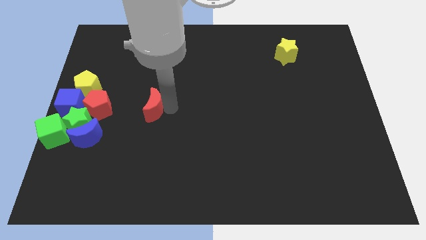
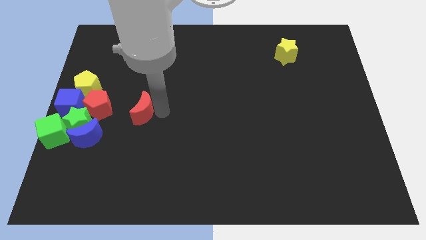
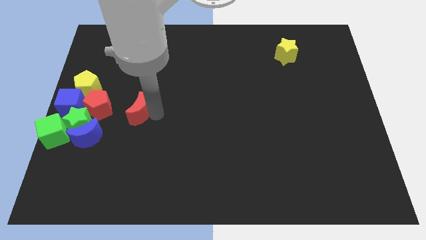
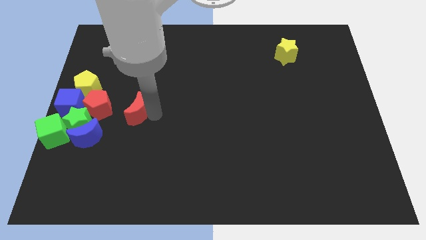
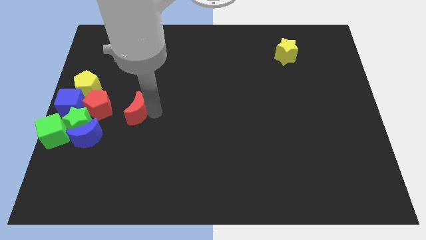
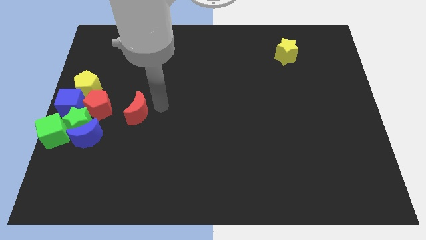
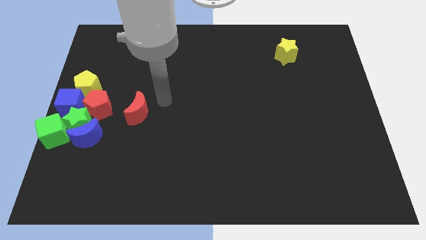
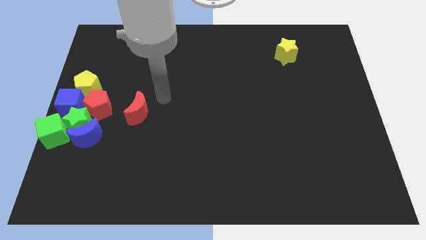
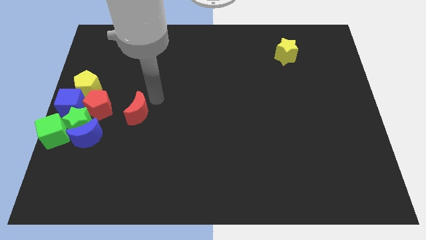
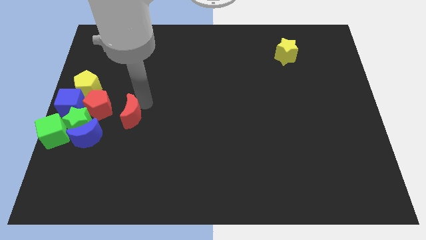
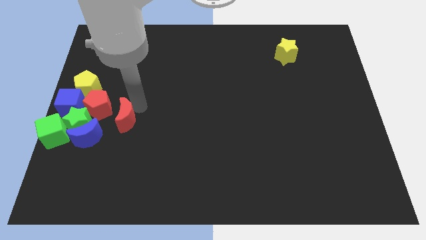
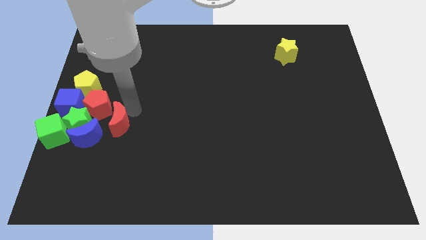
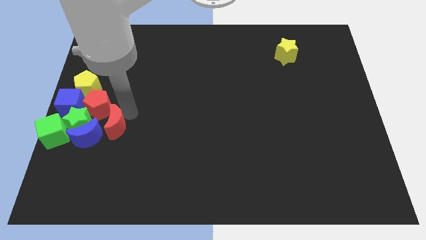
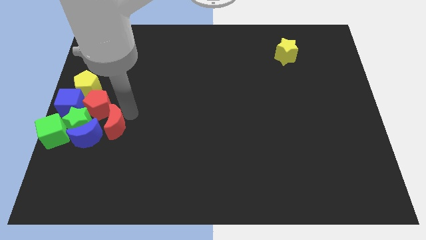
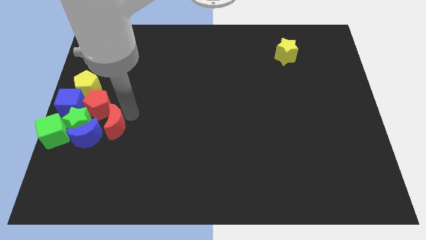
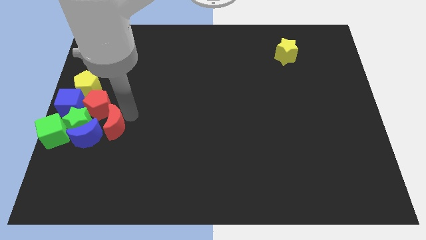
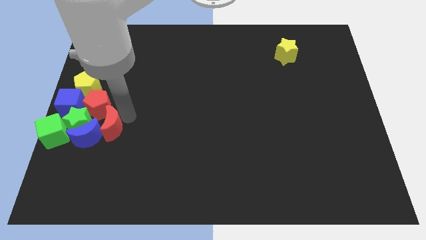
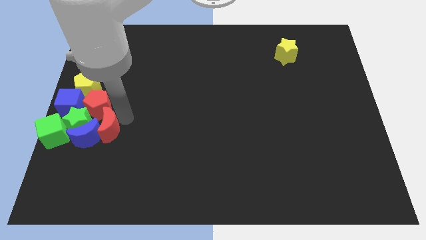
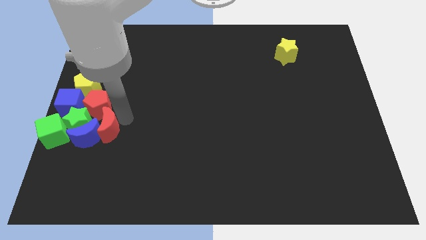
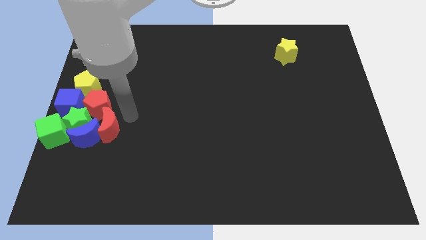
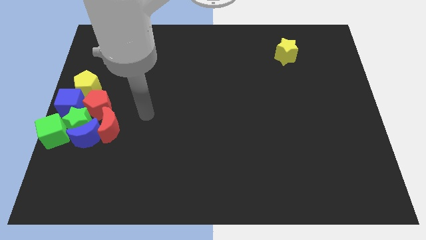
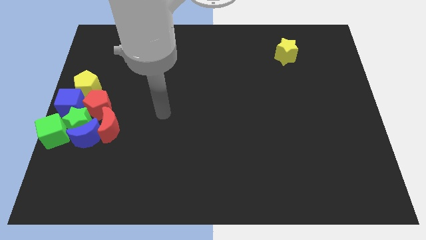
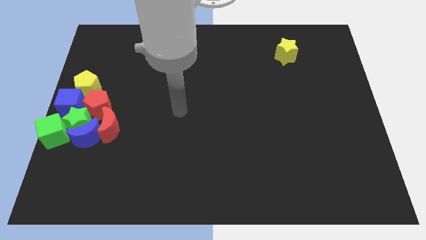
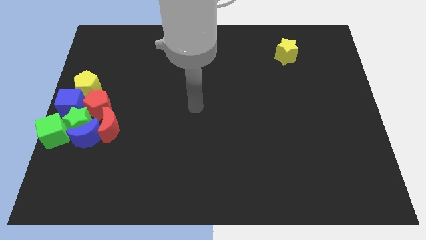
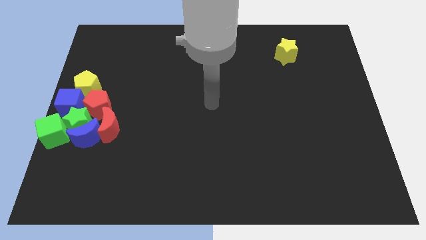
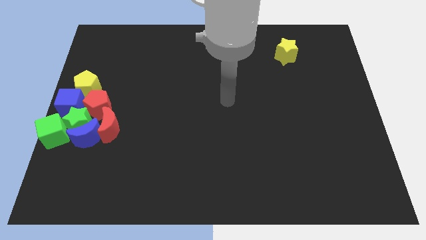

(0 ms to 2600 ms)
drag the red moon and place it into the group of blocks

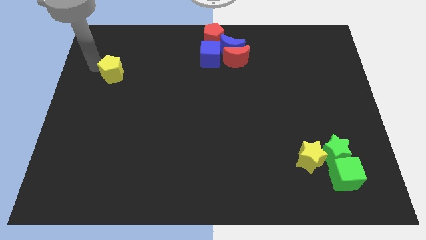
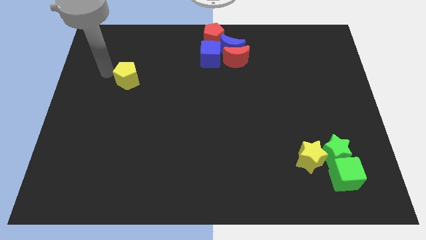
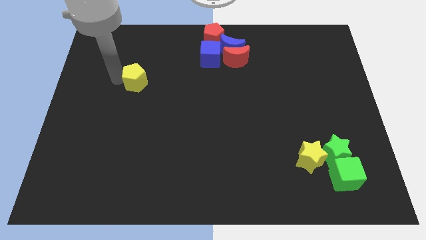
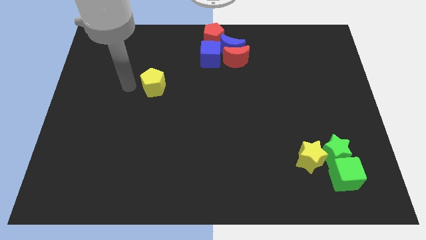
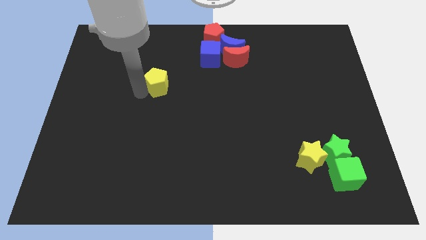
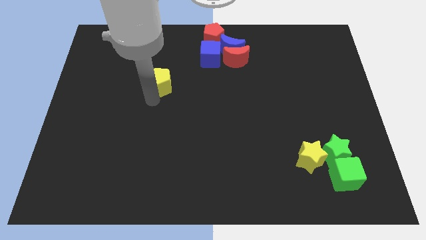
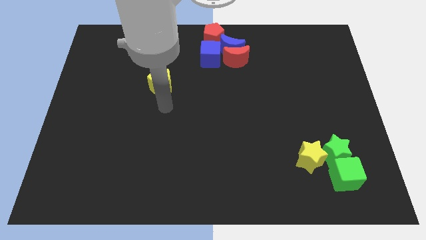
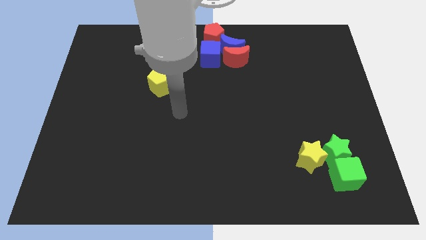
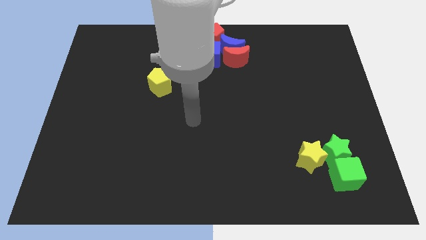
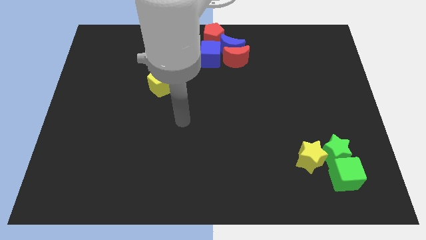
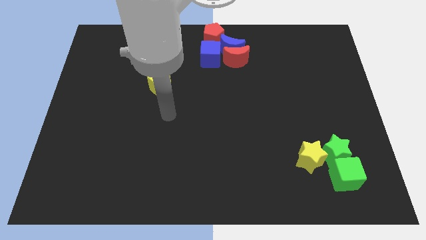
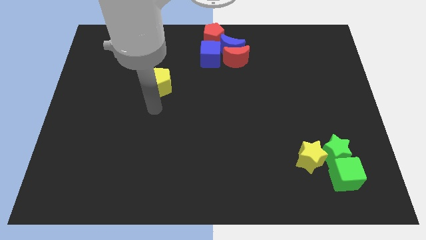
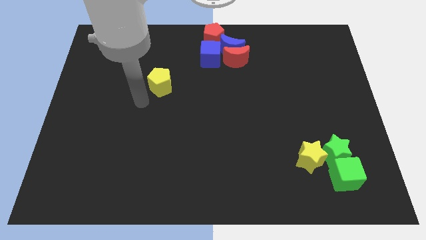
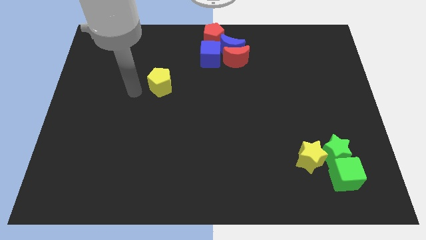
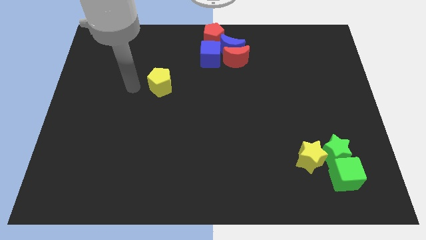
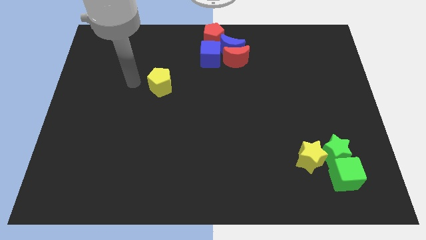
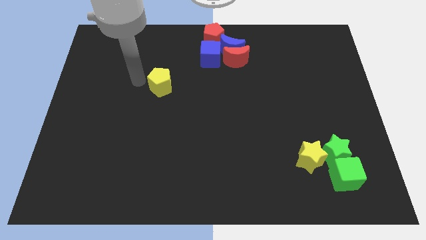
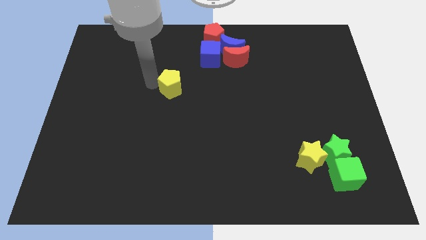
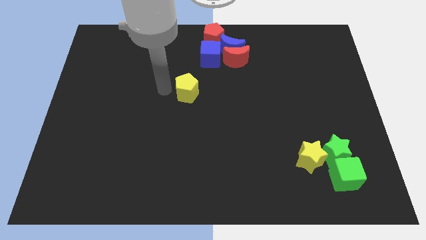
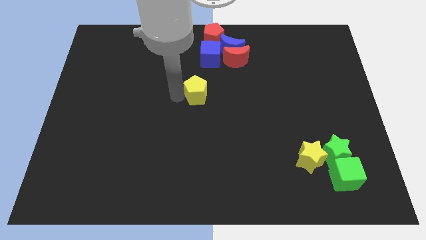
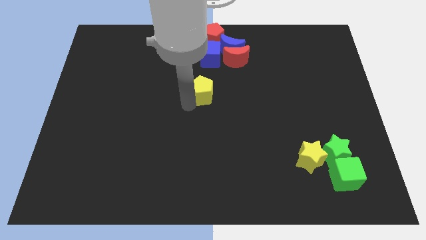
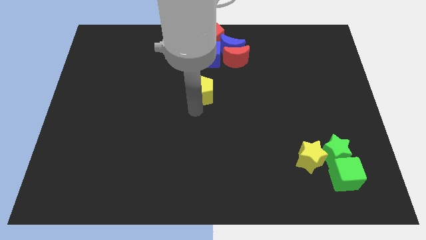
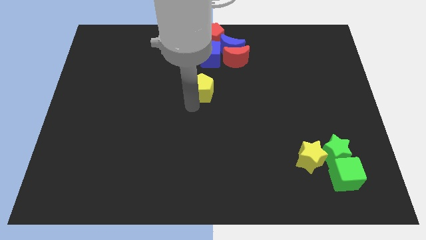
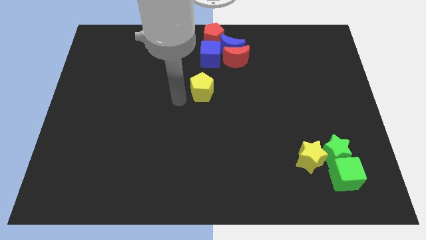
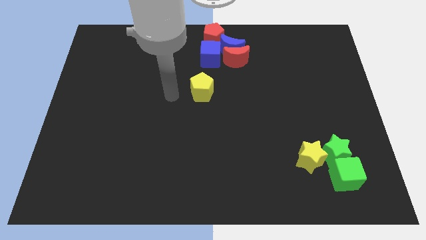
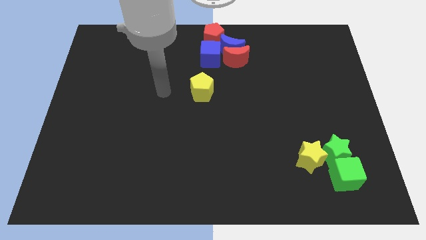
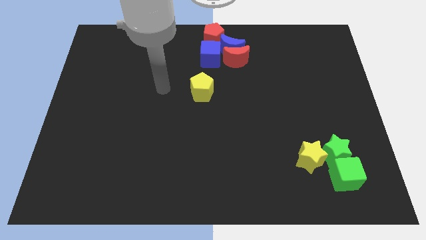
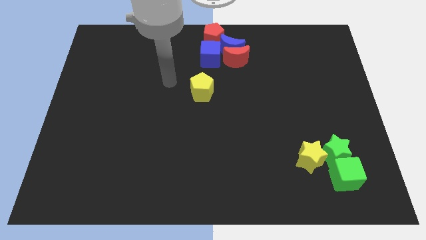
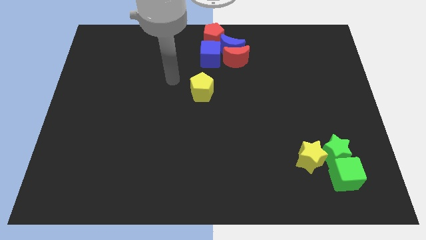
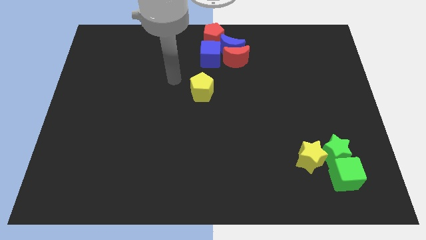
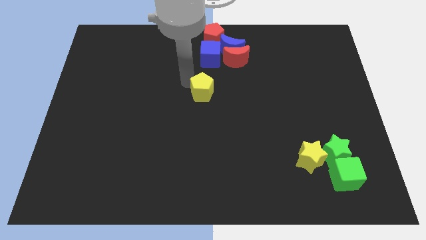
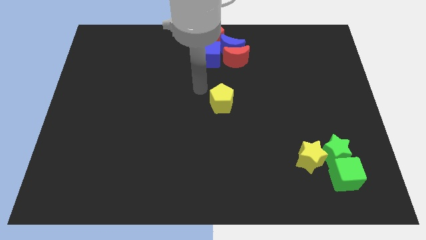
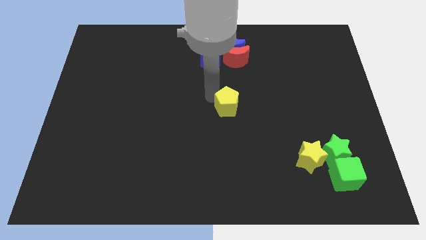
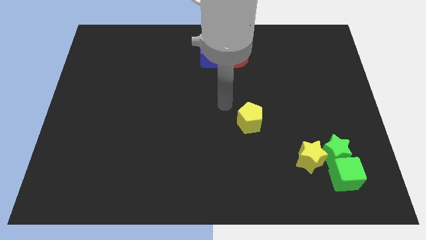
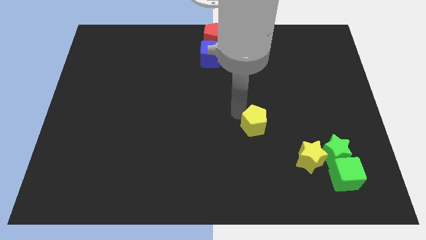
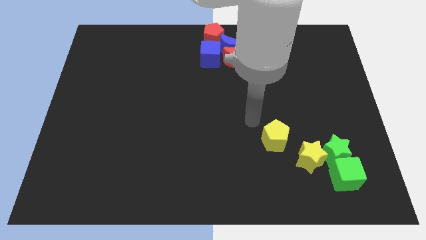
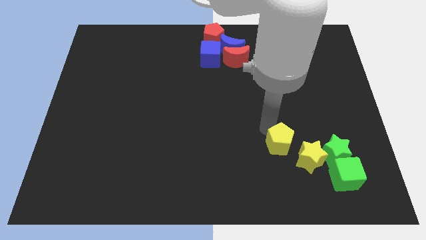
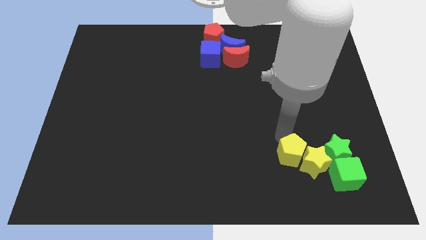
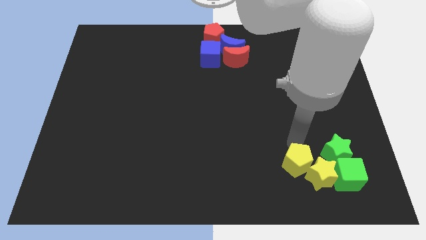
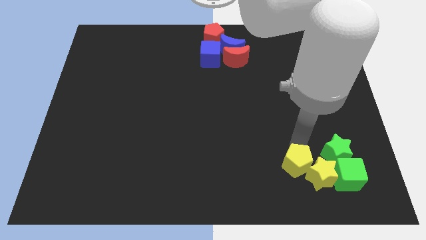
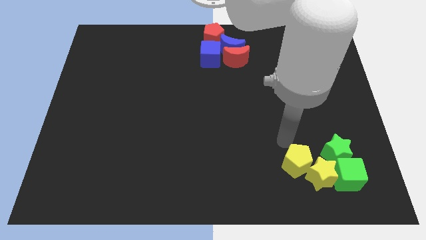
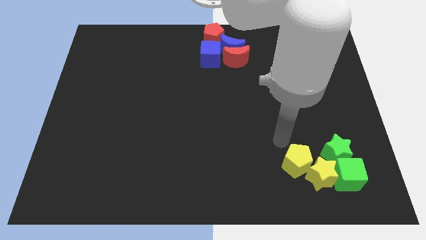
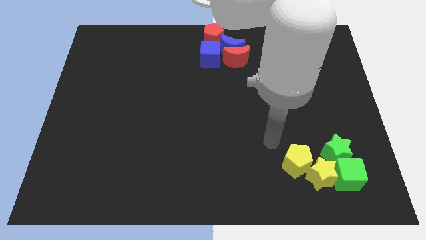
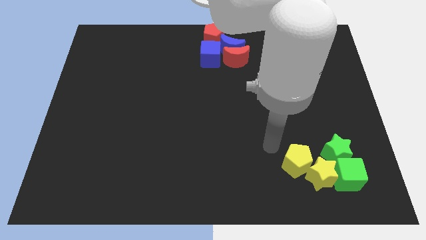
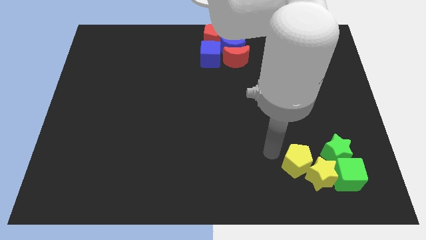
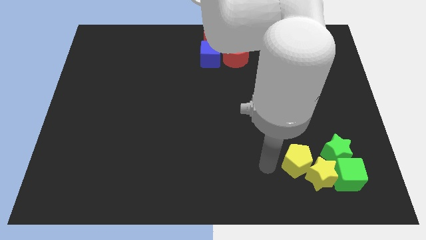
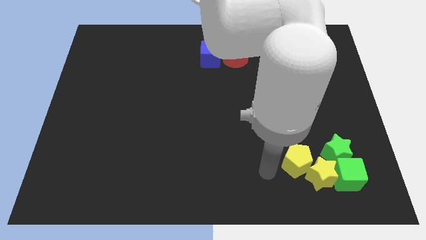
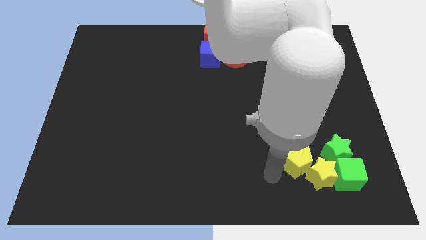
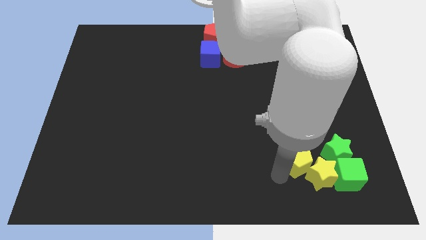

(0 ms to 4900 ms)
slide the yellow pentagon to the bottom right

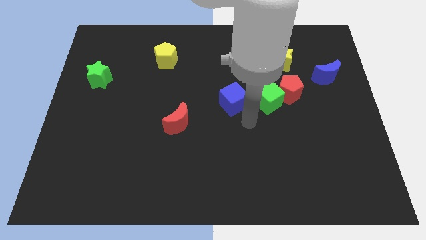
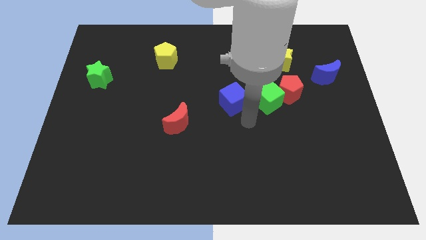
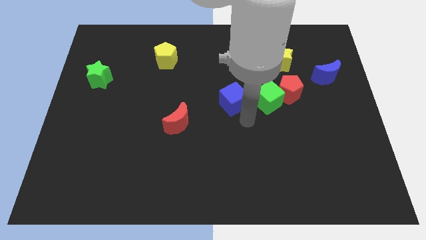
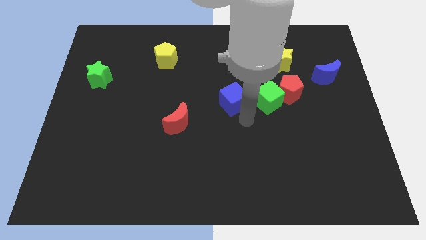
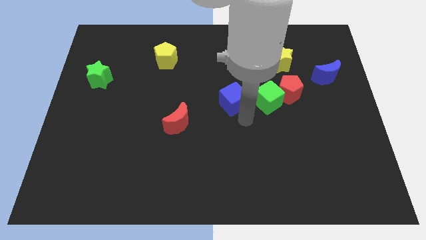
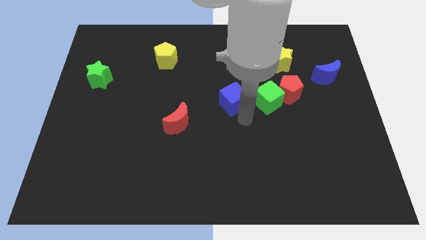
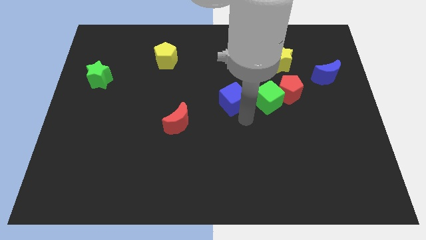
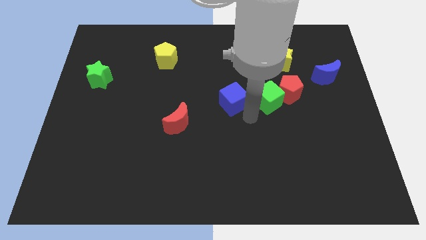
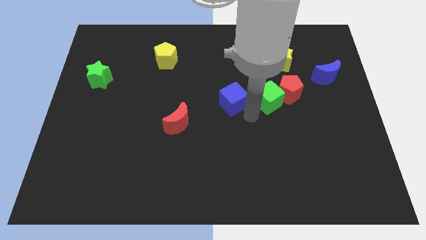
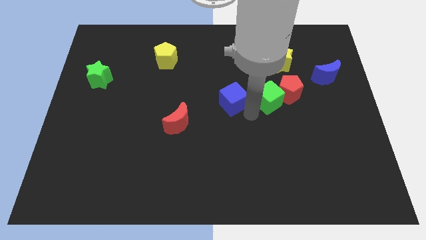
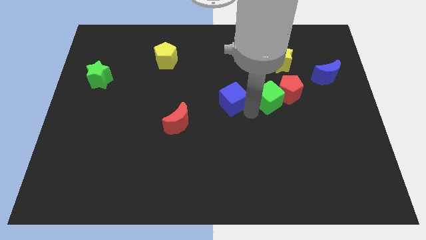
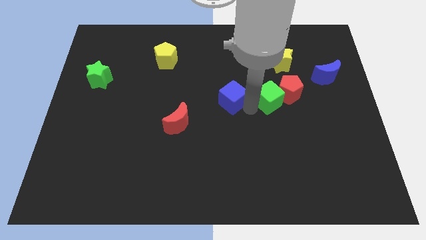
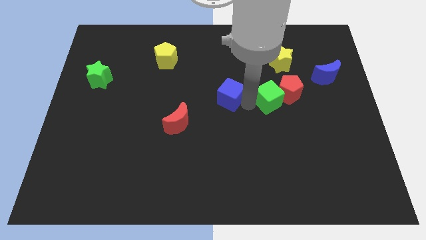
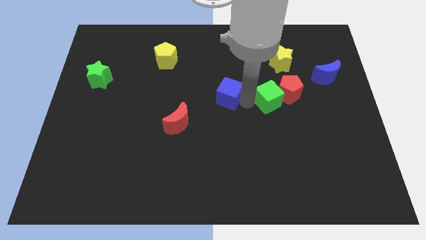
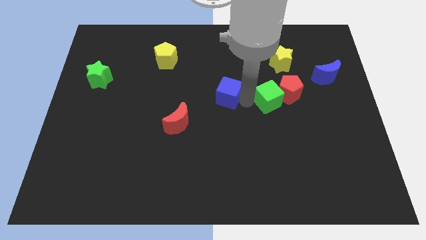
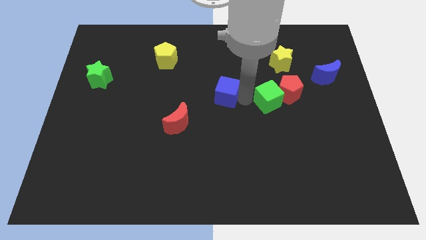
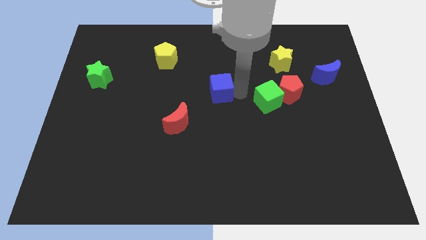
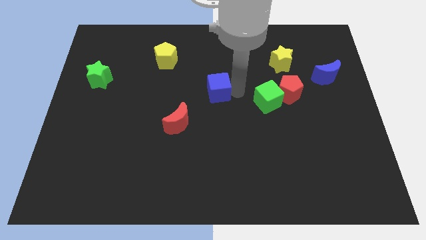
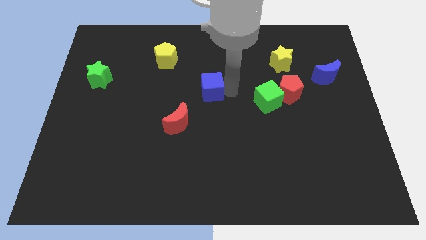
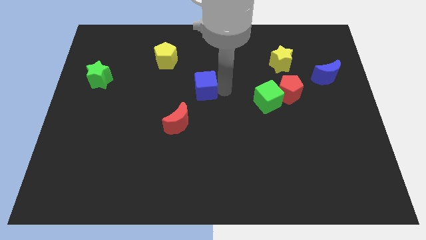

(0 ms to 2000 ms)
separate blue and green cubes
